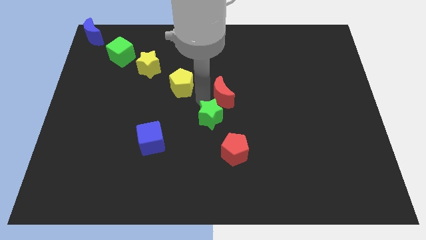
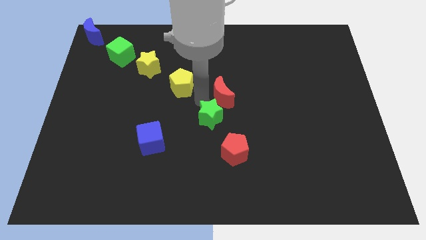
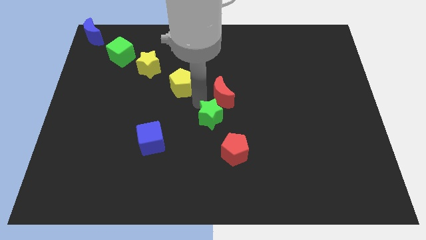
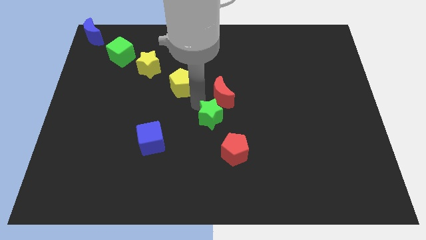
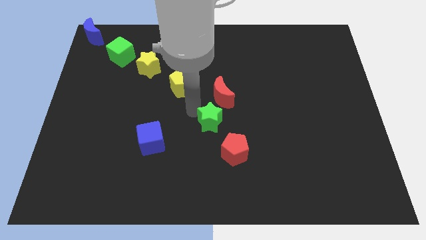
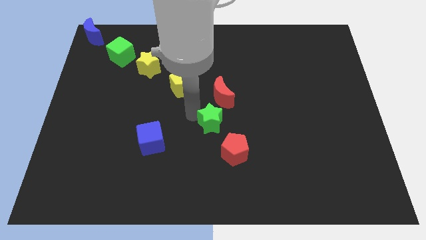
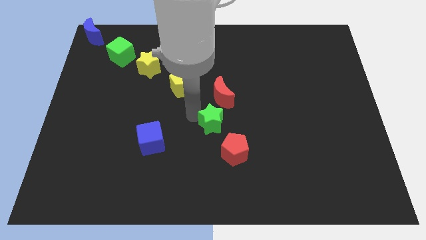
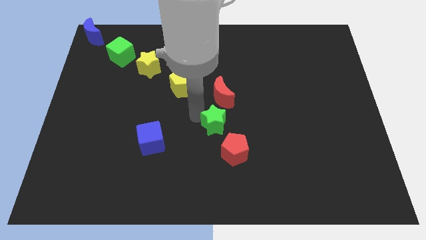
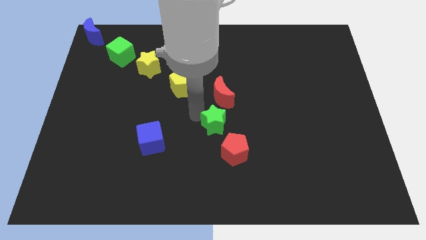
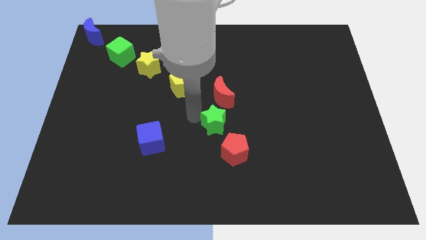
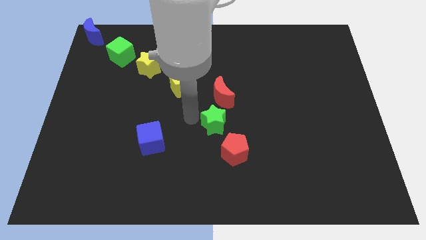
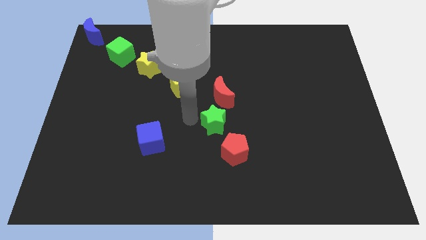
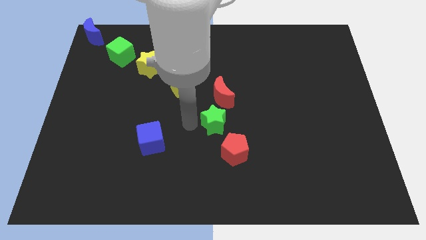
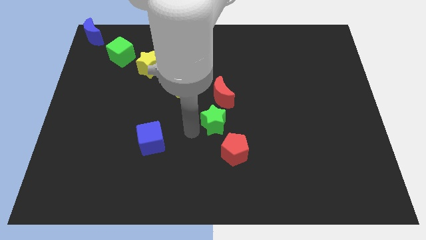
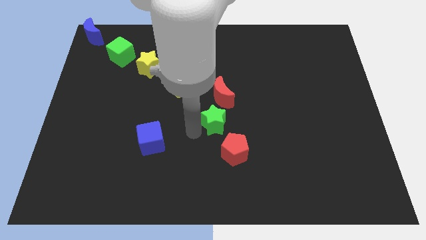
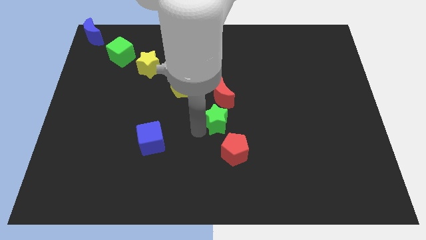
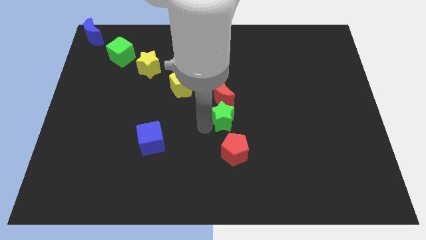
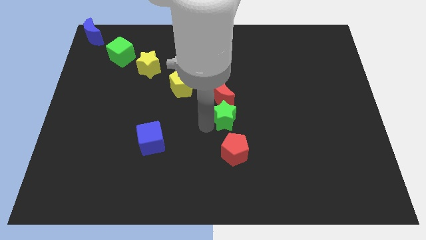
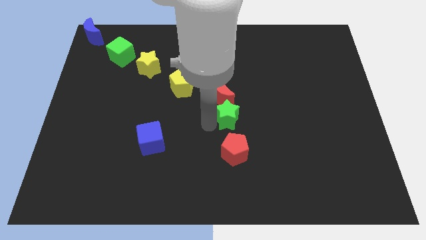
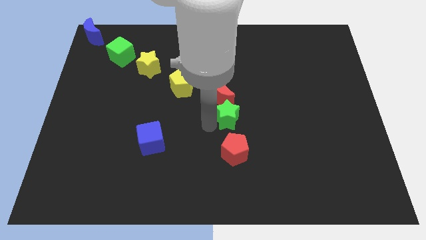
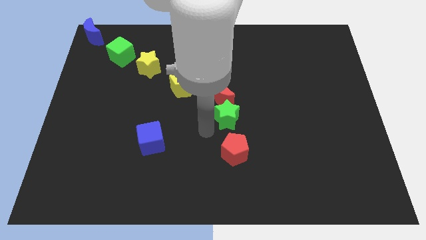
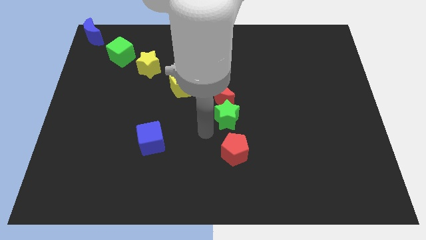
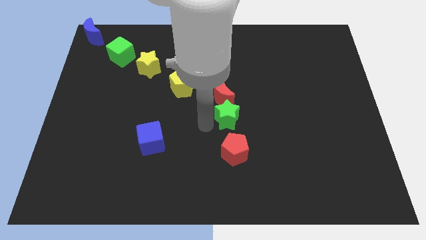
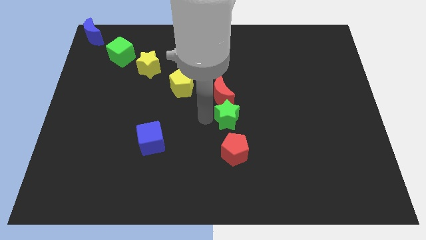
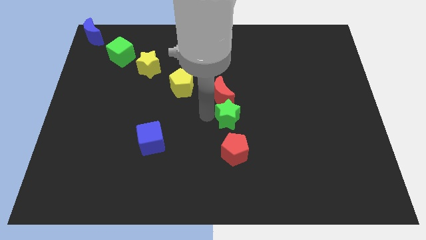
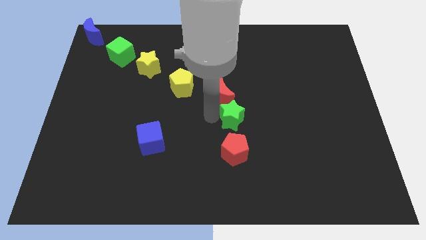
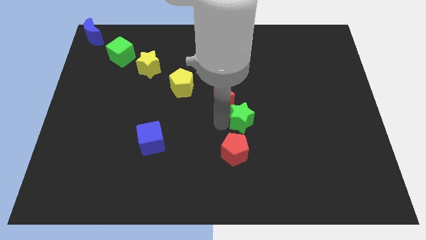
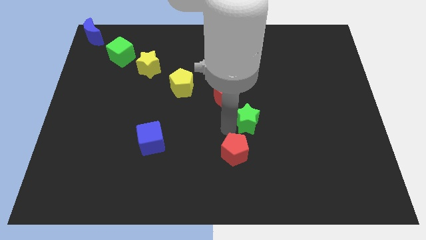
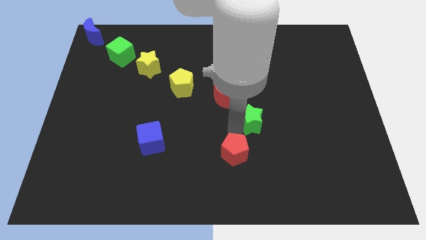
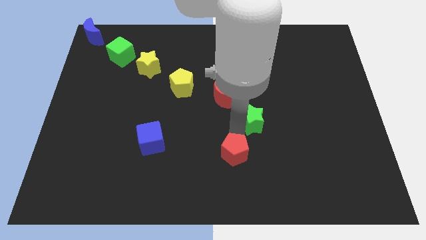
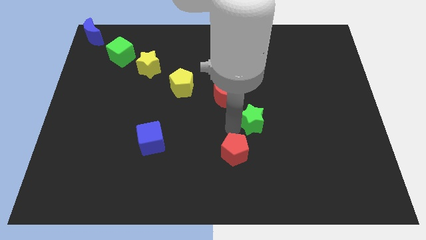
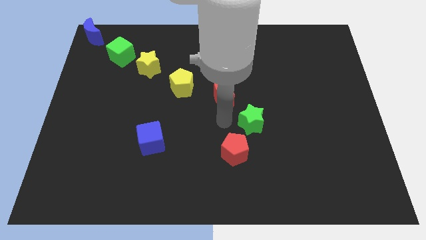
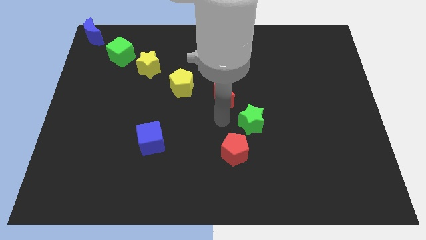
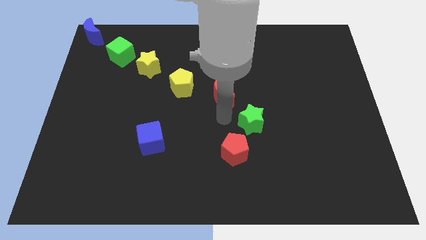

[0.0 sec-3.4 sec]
slide the green star diagonally on the bottom of the red crescent

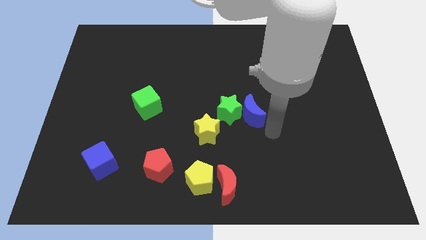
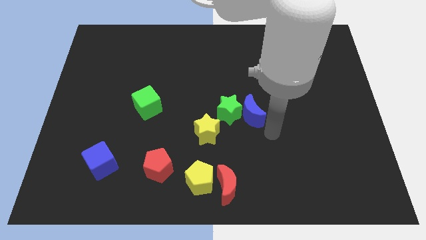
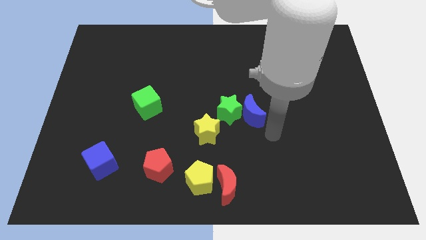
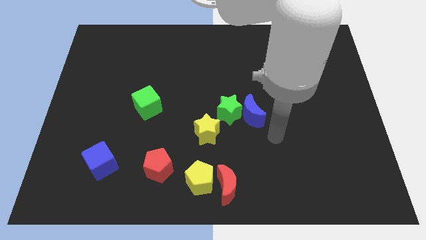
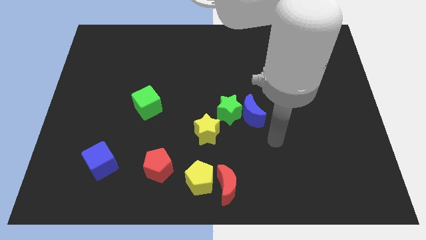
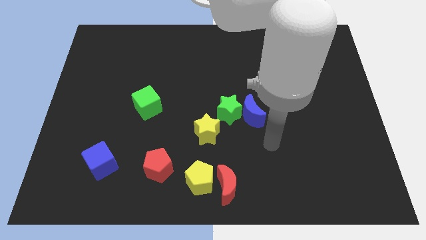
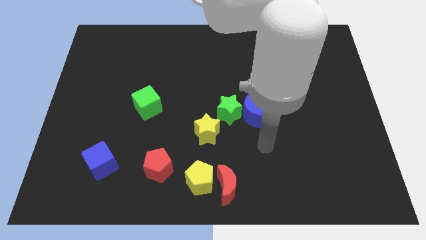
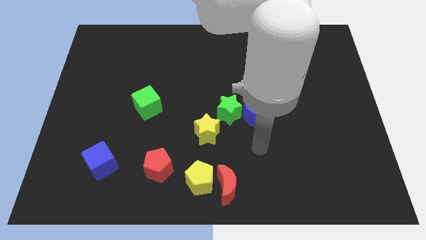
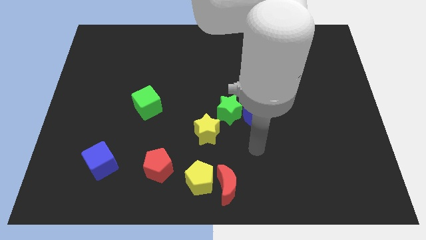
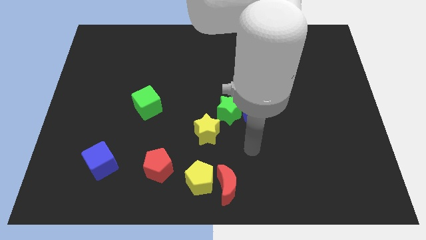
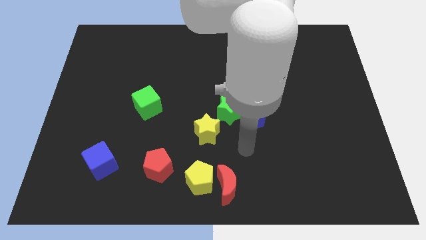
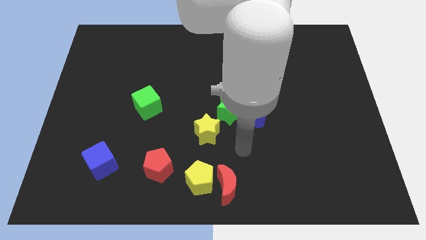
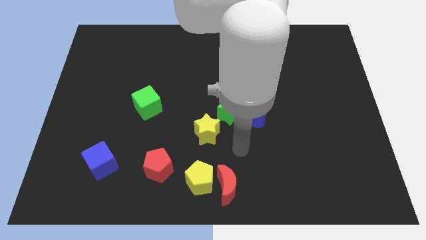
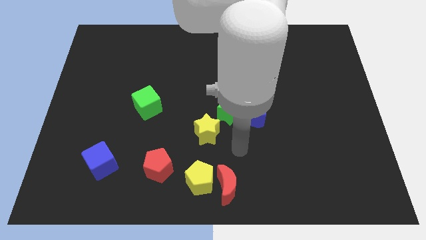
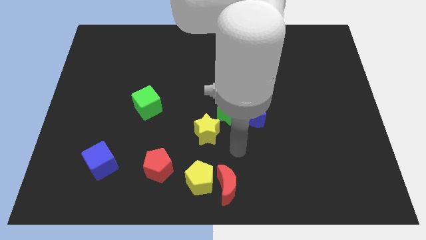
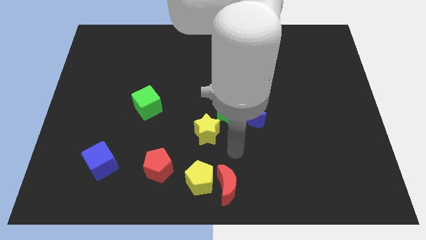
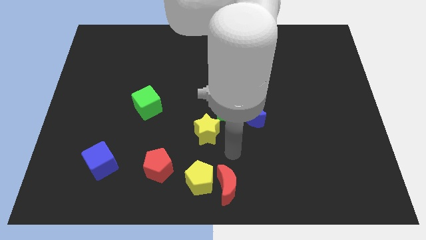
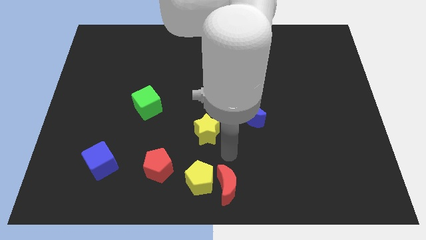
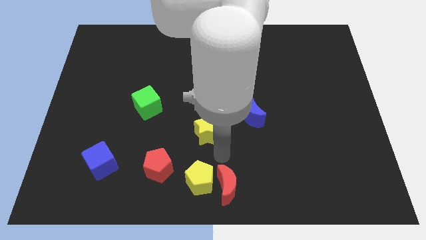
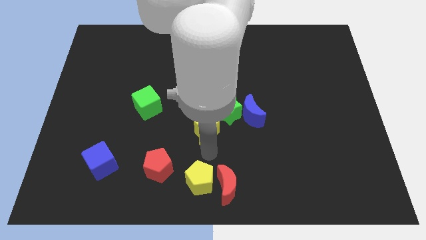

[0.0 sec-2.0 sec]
move your arm to the bottom of the yellow star

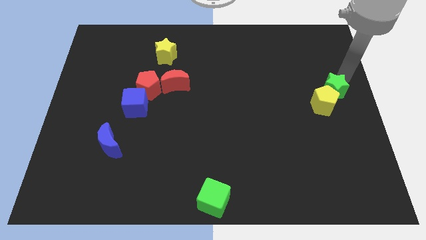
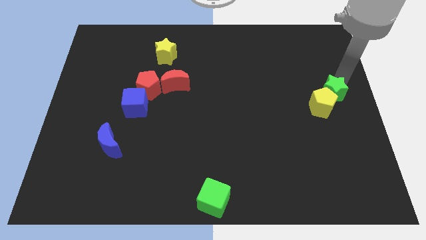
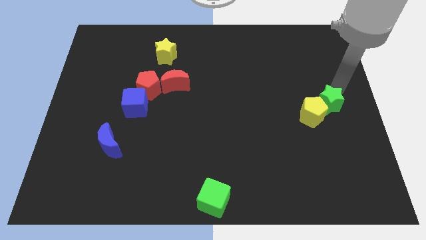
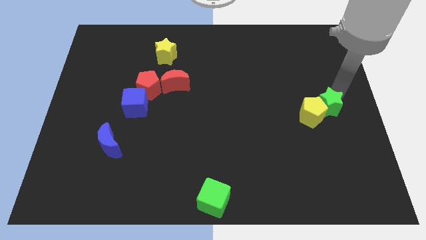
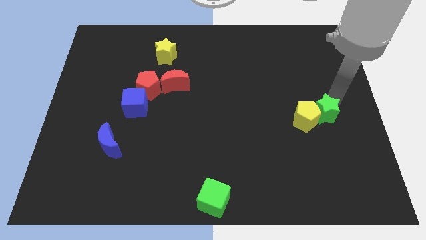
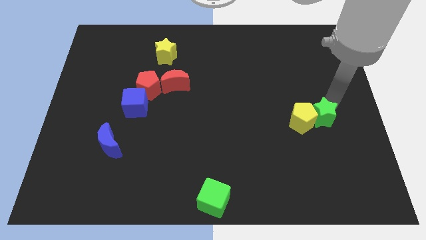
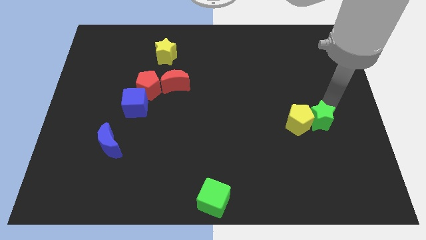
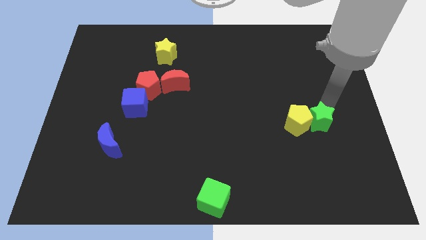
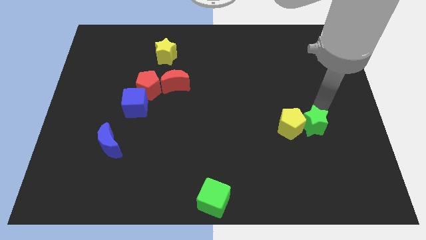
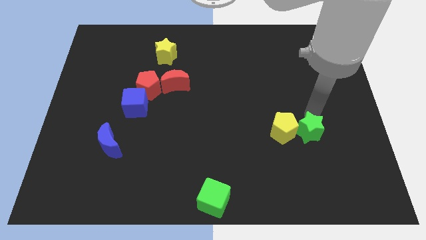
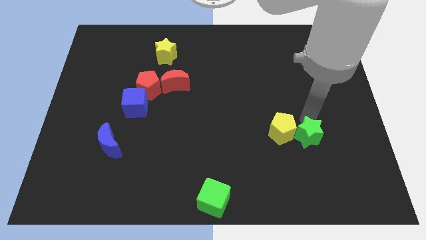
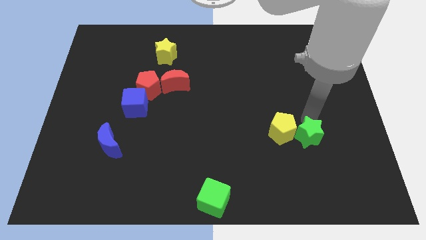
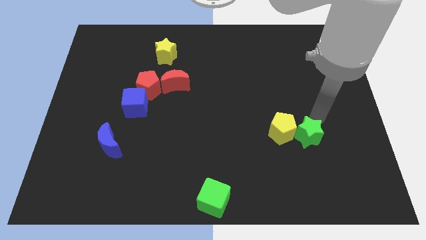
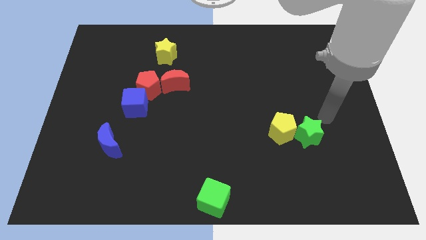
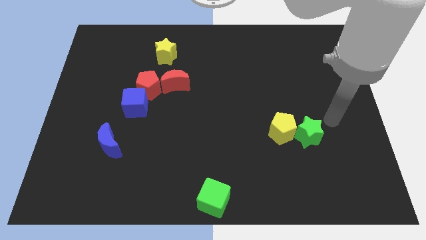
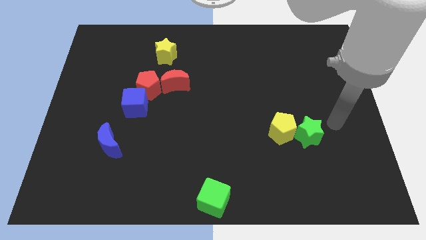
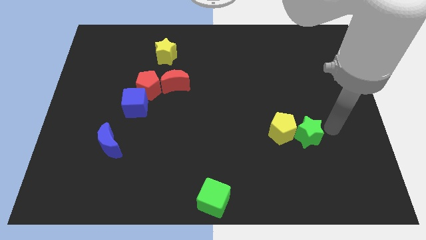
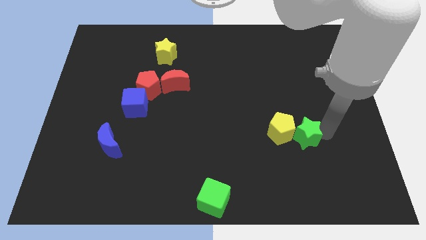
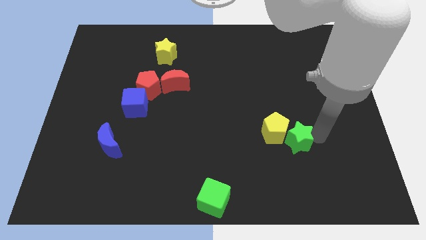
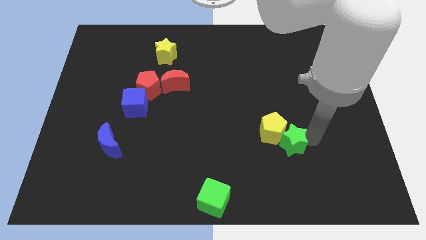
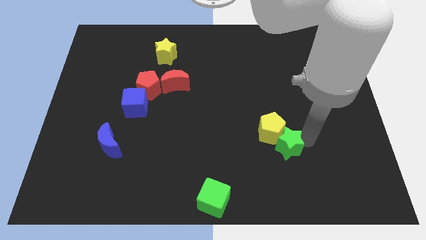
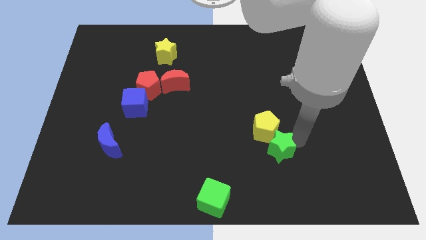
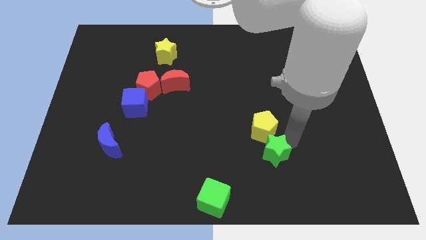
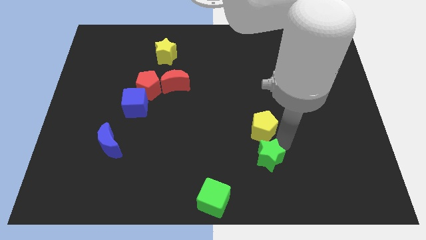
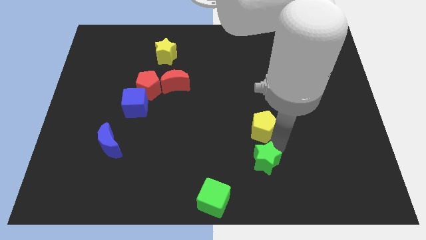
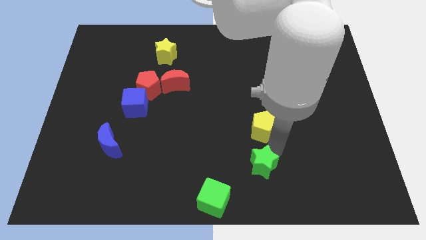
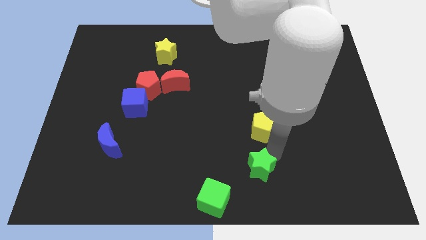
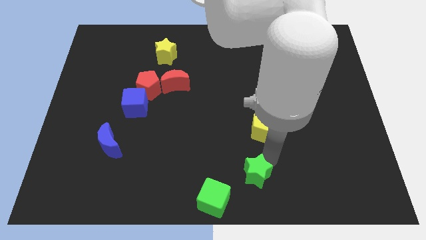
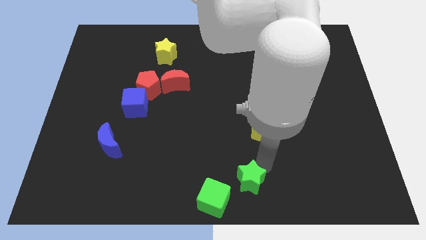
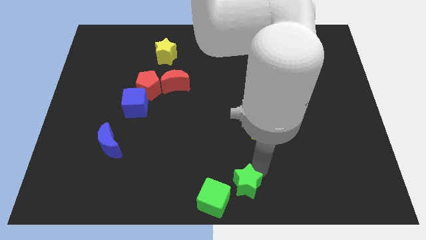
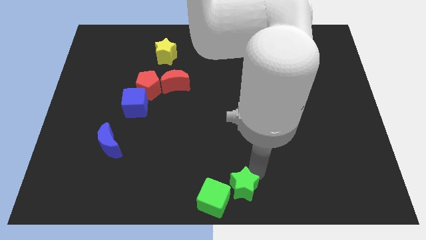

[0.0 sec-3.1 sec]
push the green star diagonally top right to the green cube

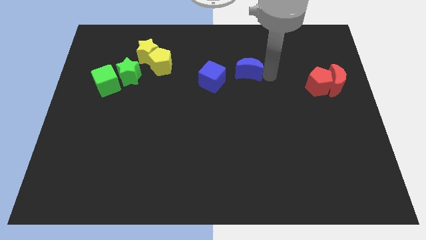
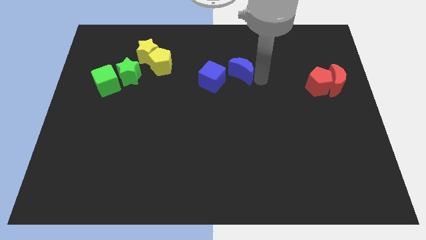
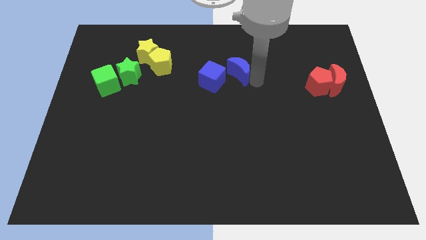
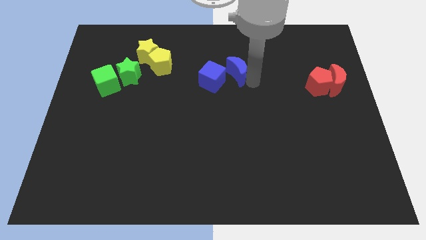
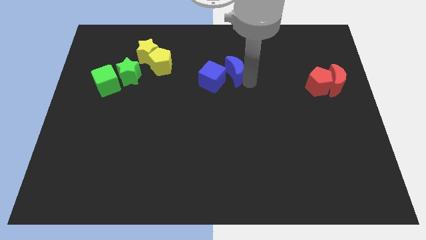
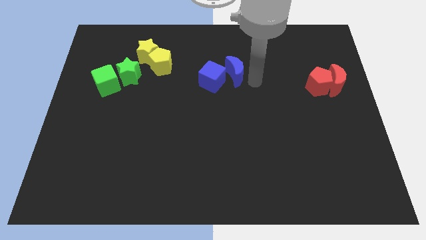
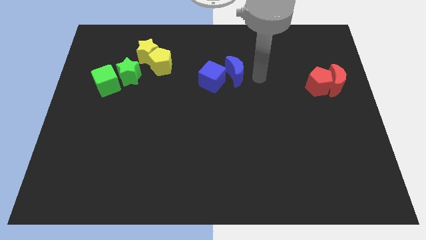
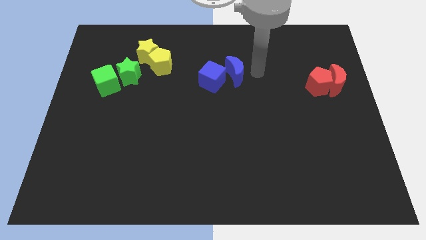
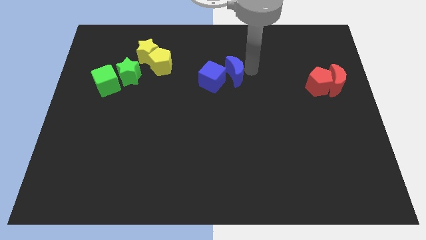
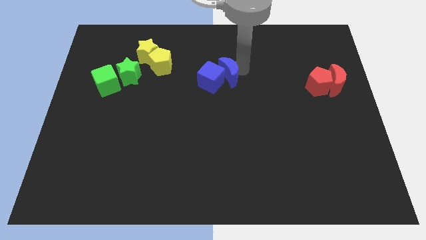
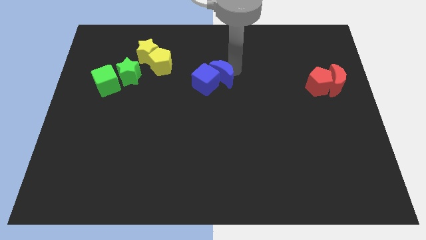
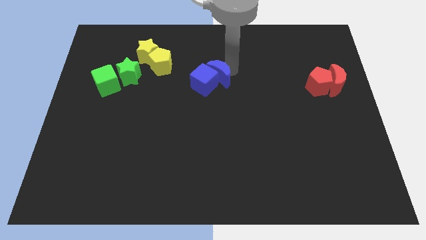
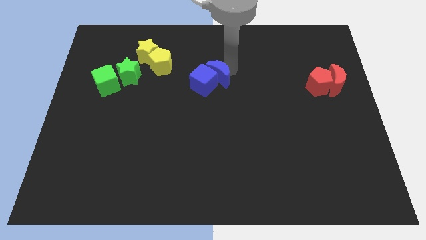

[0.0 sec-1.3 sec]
push the blue moon into the blue cube
